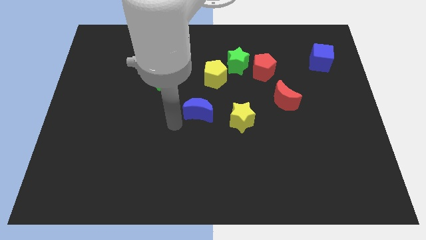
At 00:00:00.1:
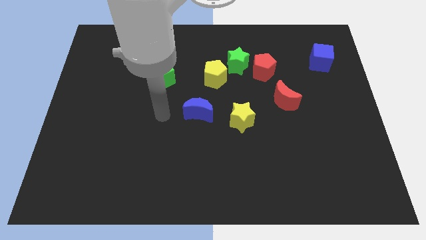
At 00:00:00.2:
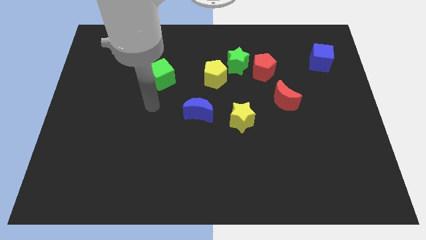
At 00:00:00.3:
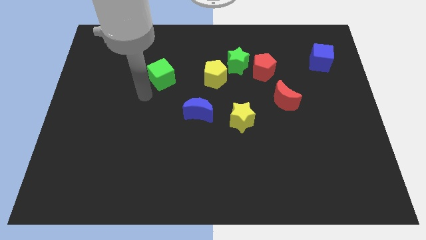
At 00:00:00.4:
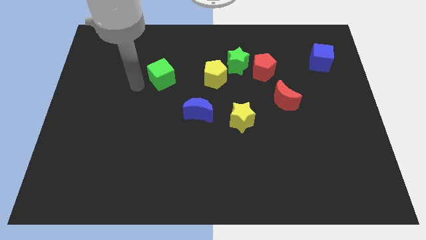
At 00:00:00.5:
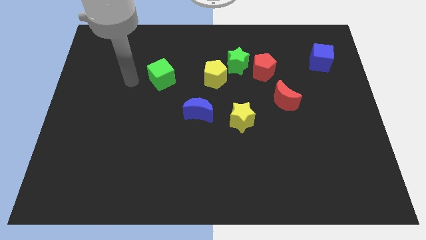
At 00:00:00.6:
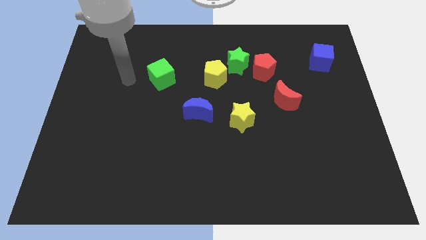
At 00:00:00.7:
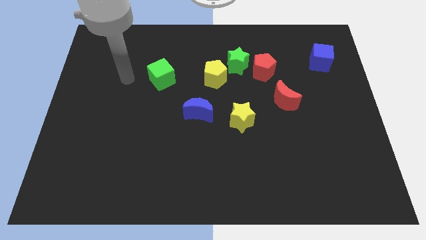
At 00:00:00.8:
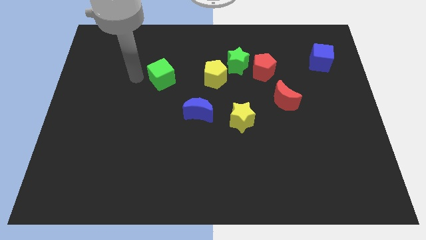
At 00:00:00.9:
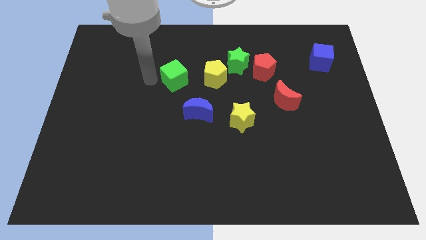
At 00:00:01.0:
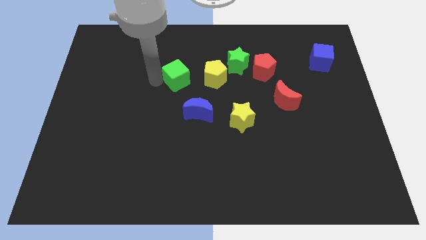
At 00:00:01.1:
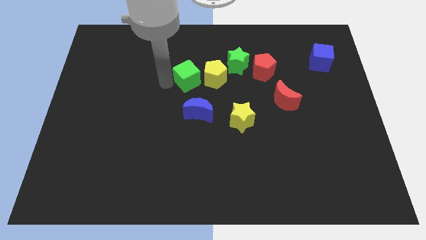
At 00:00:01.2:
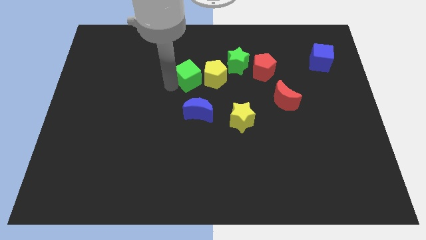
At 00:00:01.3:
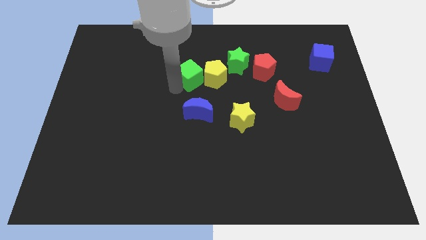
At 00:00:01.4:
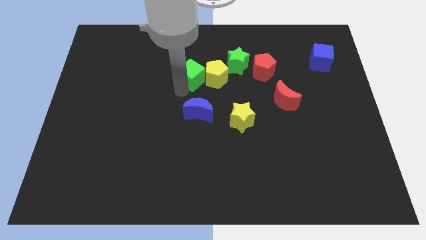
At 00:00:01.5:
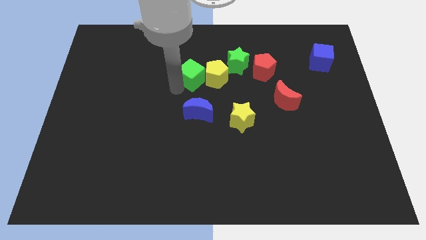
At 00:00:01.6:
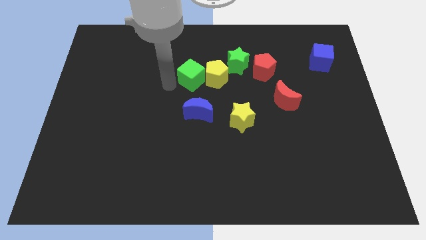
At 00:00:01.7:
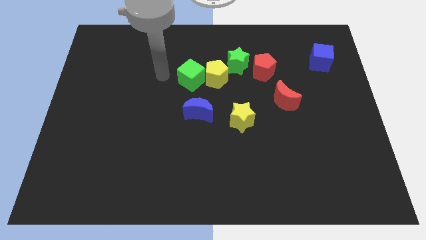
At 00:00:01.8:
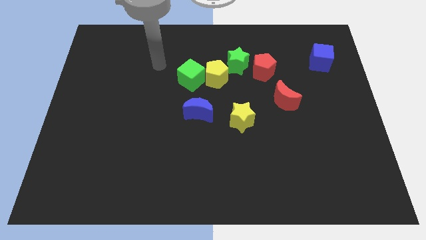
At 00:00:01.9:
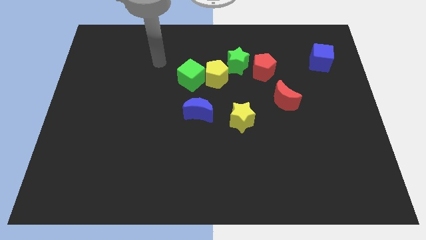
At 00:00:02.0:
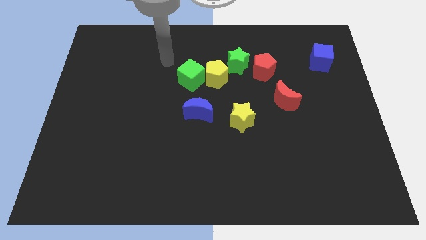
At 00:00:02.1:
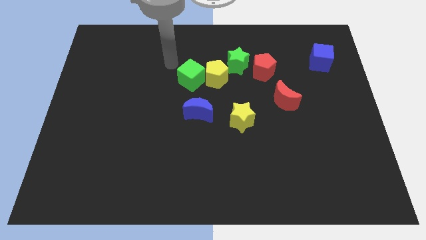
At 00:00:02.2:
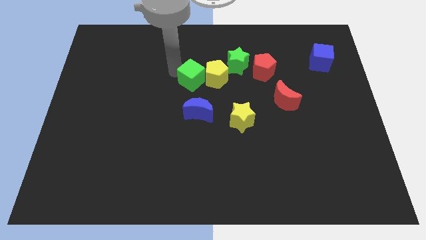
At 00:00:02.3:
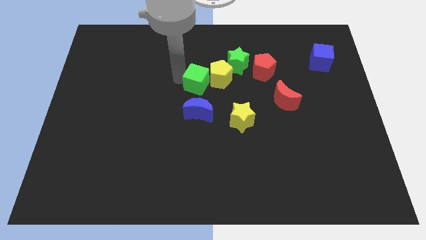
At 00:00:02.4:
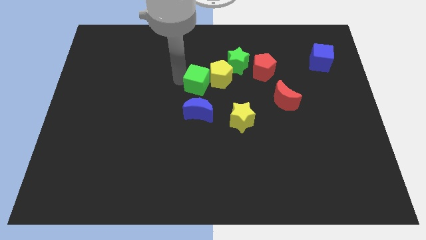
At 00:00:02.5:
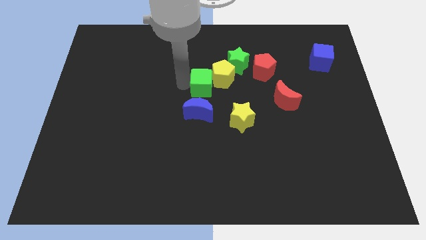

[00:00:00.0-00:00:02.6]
move the green cube to the left of the yellow pentagon

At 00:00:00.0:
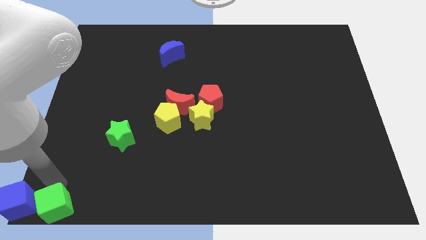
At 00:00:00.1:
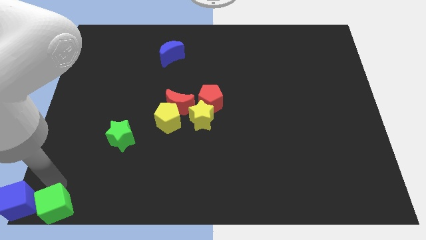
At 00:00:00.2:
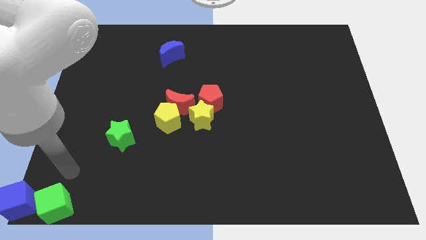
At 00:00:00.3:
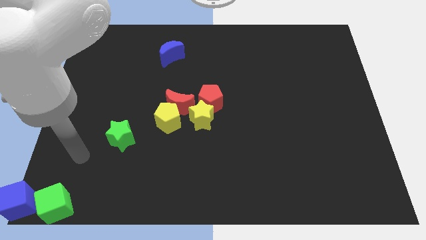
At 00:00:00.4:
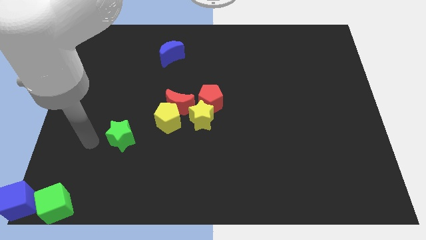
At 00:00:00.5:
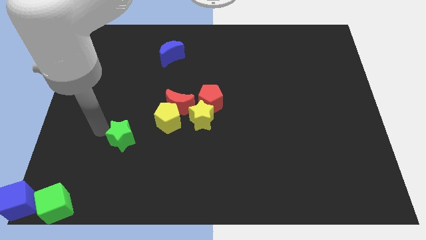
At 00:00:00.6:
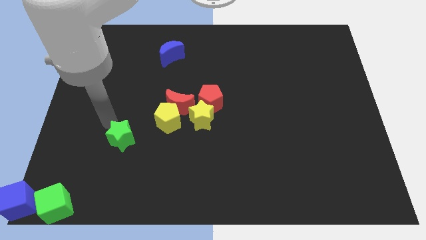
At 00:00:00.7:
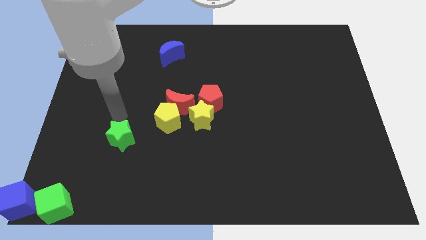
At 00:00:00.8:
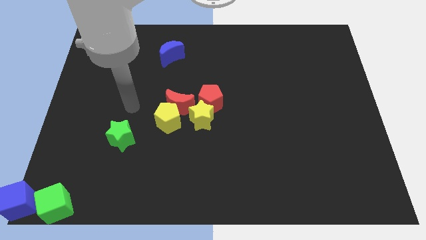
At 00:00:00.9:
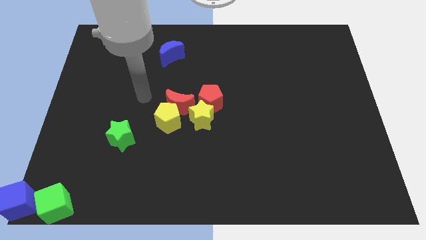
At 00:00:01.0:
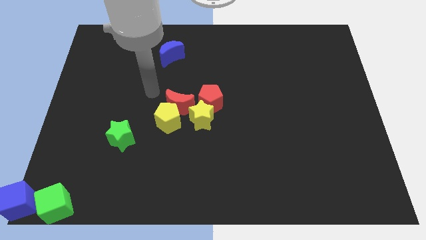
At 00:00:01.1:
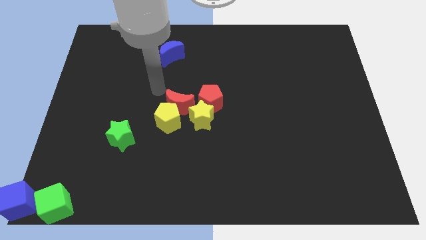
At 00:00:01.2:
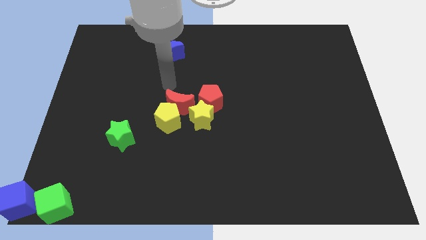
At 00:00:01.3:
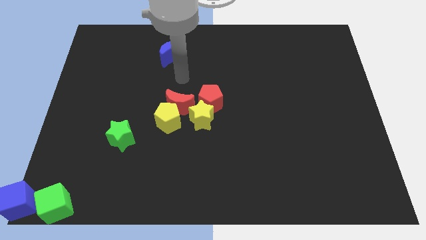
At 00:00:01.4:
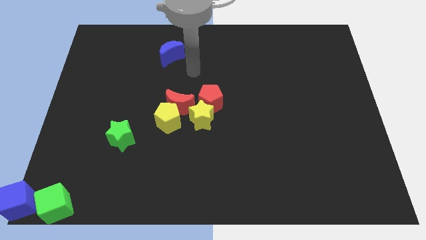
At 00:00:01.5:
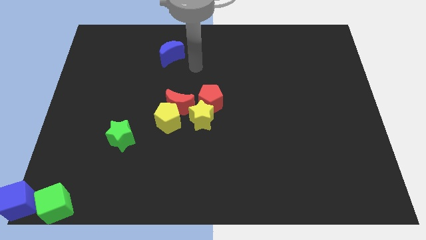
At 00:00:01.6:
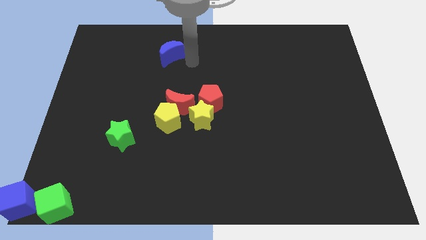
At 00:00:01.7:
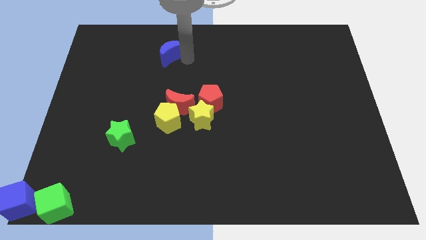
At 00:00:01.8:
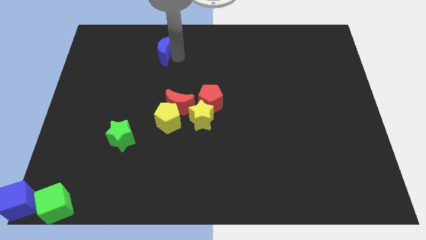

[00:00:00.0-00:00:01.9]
move the arm towards blue crescent

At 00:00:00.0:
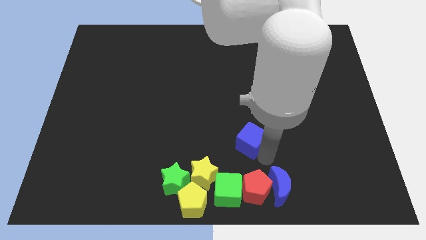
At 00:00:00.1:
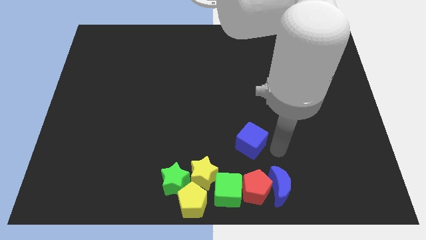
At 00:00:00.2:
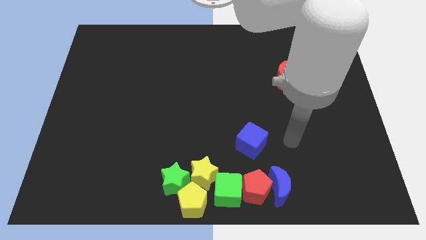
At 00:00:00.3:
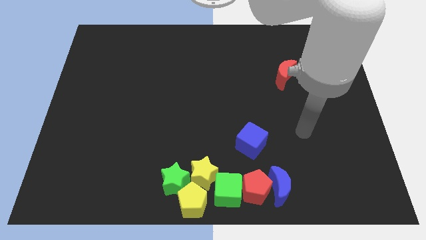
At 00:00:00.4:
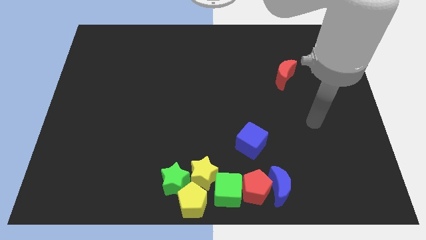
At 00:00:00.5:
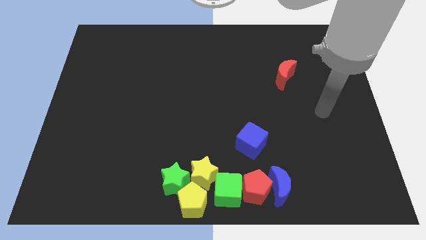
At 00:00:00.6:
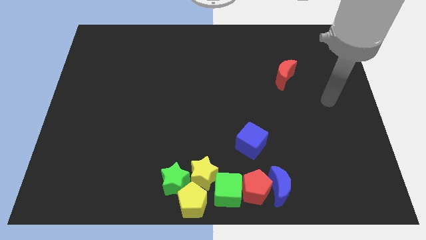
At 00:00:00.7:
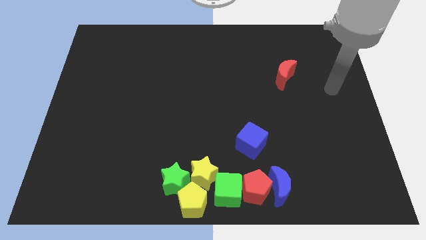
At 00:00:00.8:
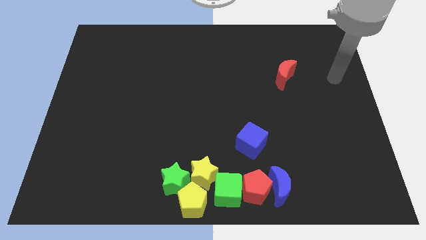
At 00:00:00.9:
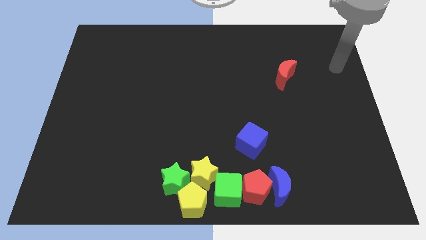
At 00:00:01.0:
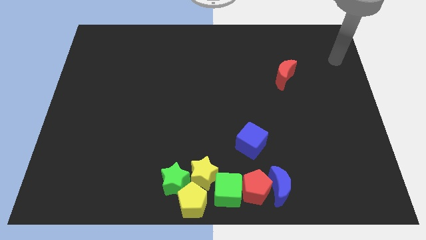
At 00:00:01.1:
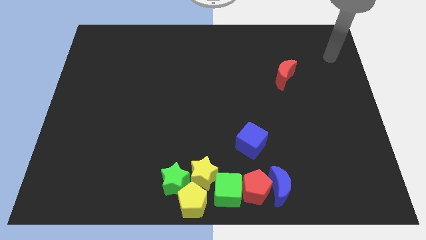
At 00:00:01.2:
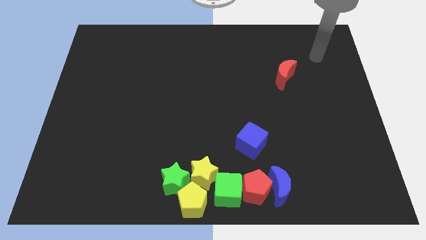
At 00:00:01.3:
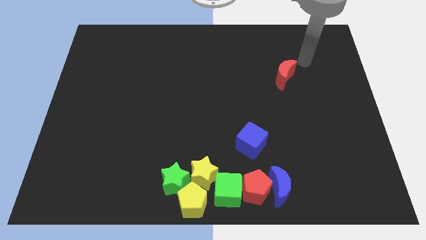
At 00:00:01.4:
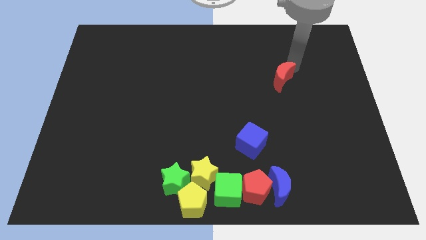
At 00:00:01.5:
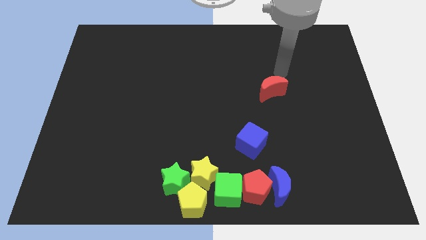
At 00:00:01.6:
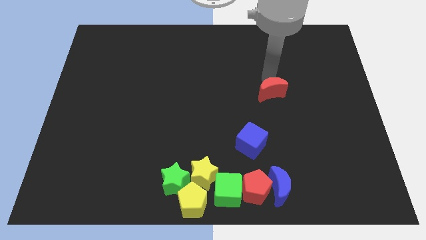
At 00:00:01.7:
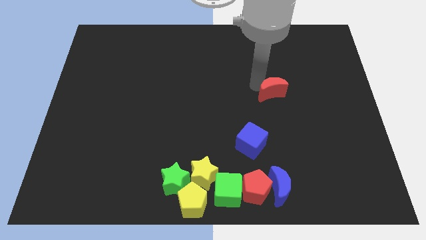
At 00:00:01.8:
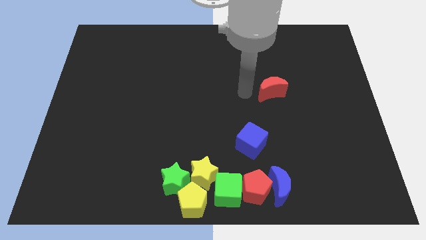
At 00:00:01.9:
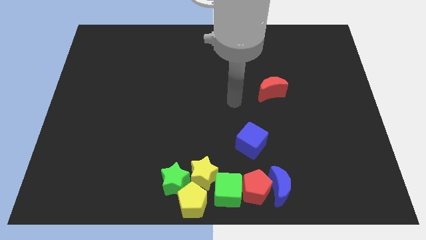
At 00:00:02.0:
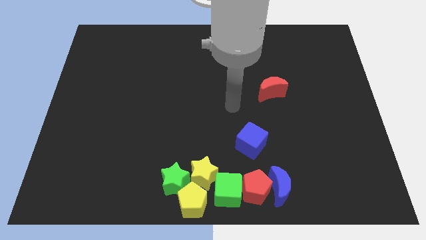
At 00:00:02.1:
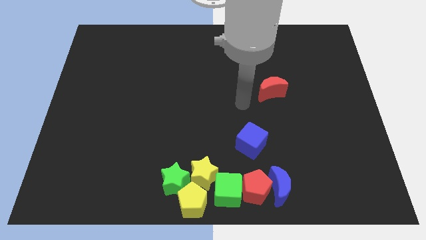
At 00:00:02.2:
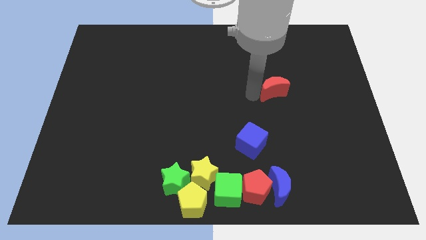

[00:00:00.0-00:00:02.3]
move the red crescent towards the blue cube

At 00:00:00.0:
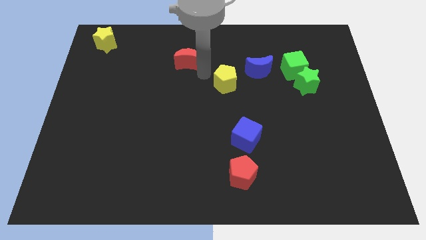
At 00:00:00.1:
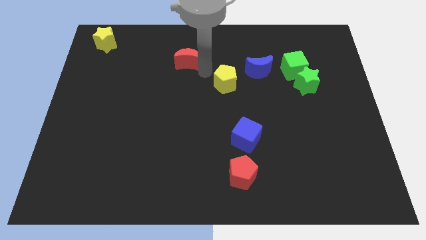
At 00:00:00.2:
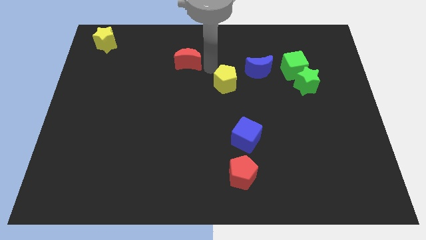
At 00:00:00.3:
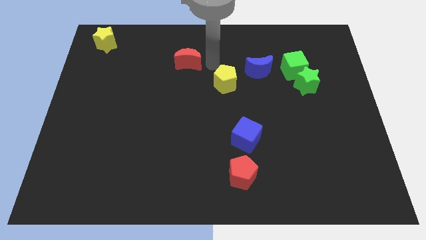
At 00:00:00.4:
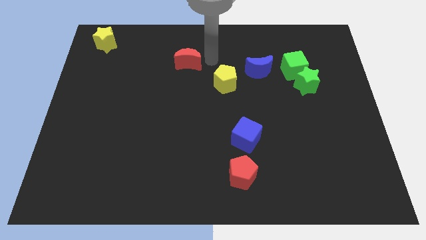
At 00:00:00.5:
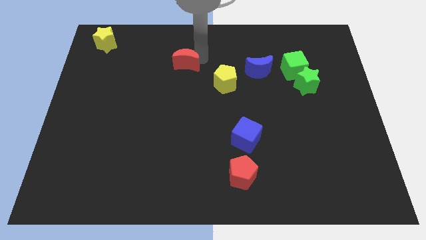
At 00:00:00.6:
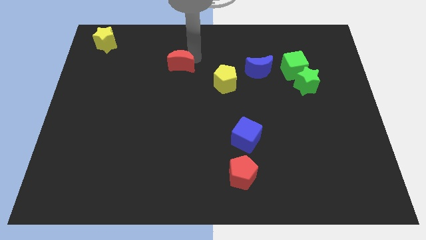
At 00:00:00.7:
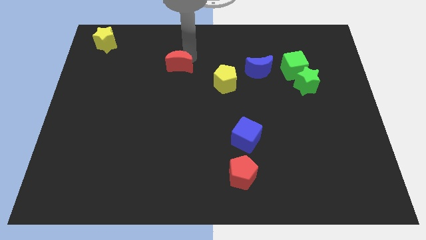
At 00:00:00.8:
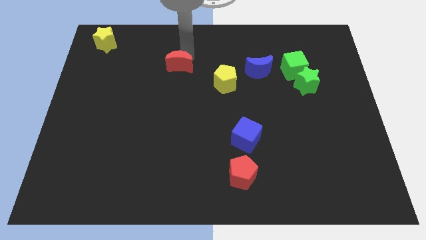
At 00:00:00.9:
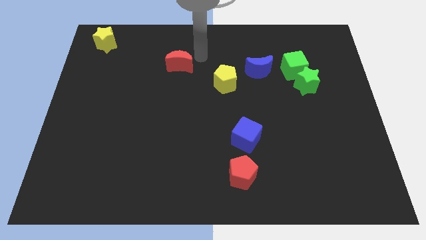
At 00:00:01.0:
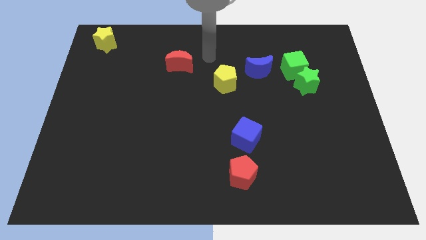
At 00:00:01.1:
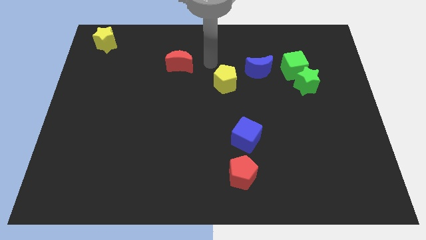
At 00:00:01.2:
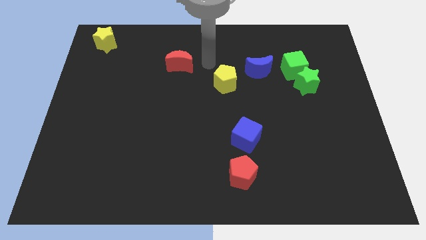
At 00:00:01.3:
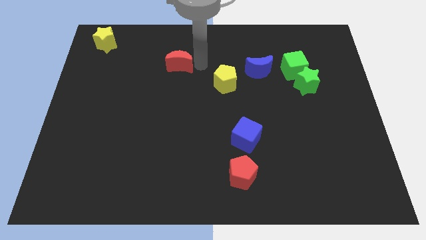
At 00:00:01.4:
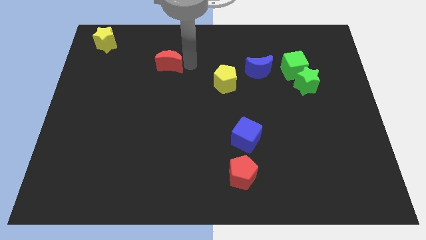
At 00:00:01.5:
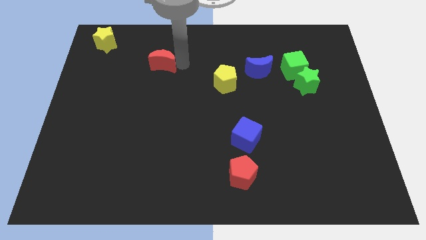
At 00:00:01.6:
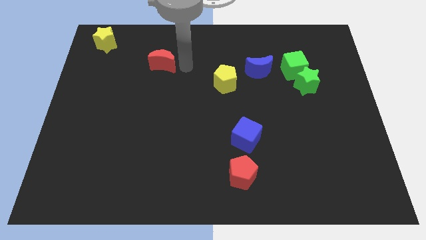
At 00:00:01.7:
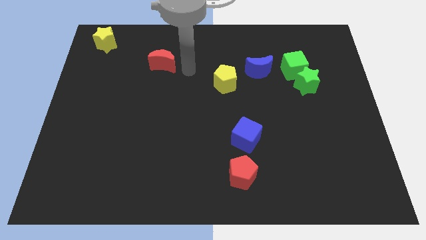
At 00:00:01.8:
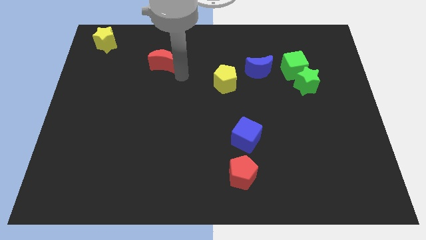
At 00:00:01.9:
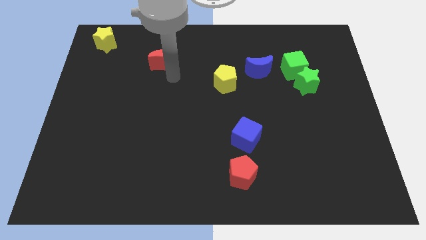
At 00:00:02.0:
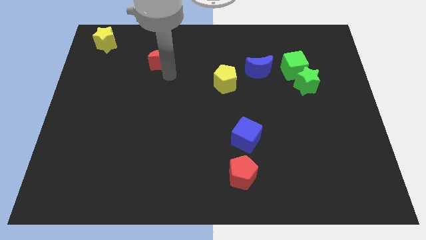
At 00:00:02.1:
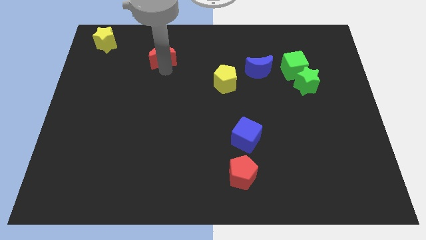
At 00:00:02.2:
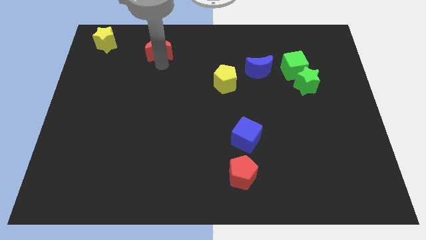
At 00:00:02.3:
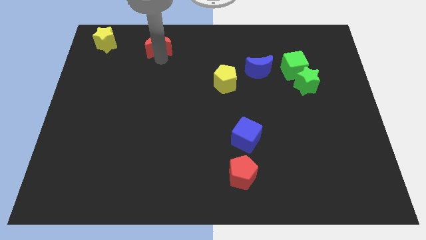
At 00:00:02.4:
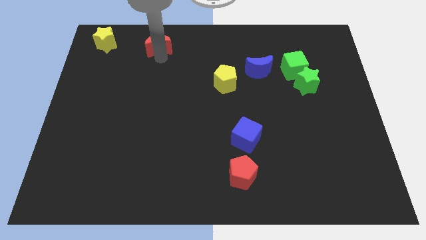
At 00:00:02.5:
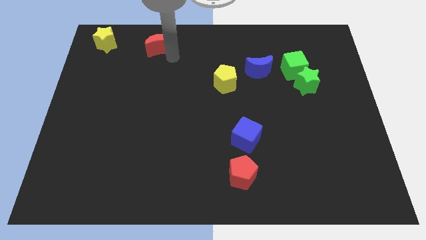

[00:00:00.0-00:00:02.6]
push red crescent to the top center
